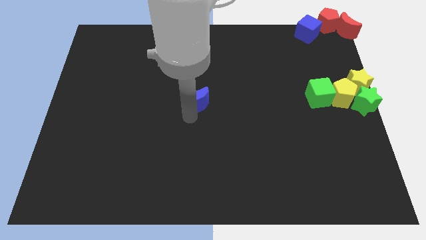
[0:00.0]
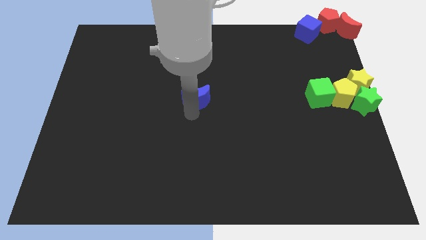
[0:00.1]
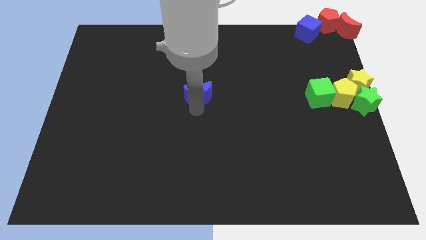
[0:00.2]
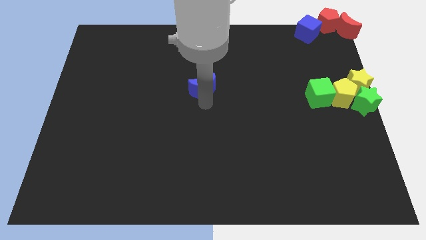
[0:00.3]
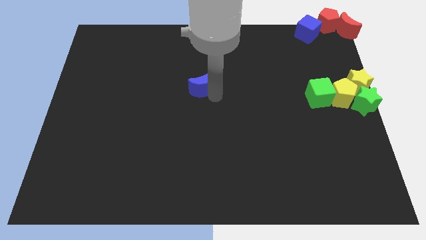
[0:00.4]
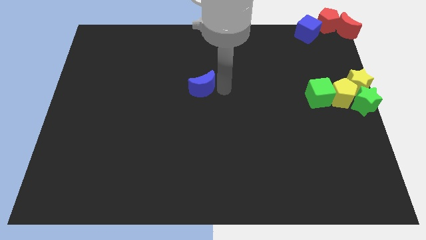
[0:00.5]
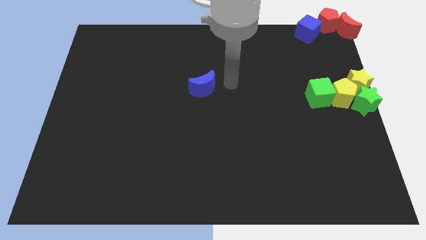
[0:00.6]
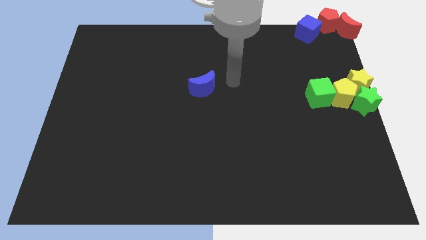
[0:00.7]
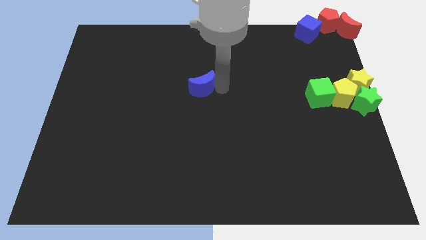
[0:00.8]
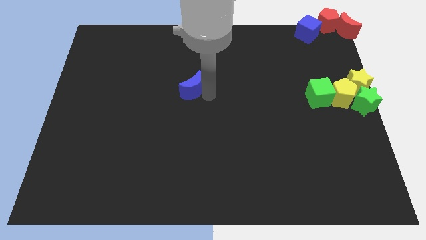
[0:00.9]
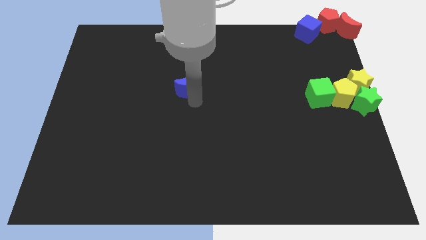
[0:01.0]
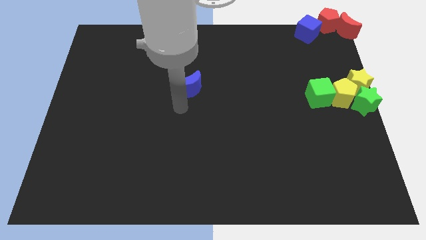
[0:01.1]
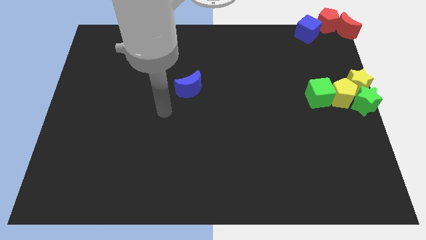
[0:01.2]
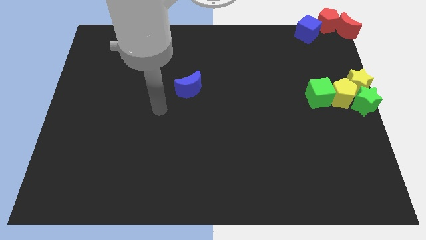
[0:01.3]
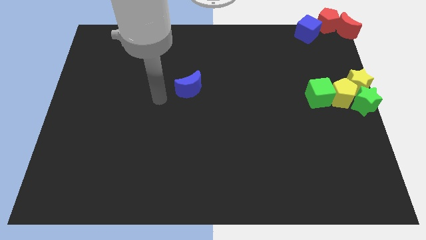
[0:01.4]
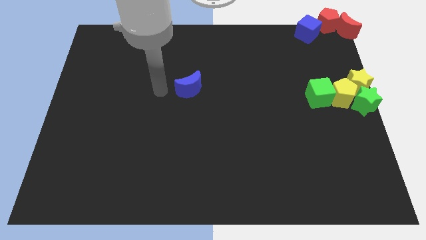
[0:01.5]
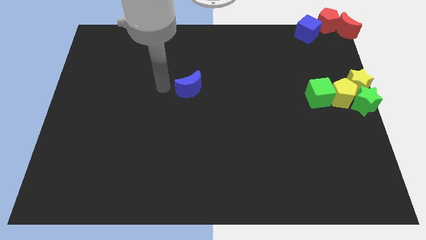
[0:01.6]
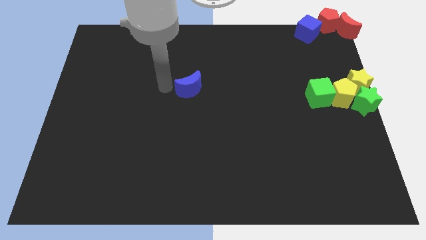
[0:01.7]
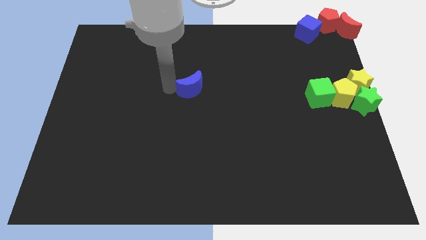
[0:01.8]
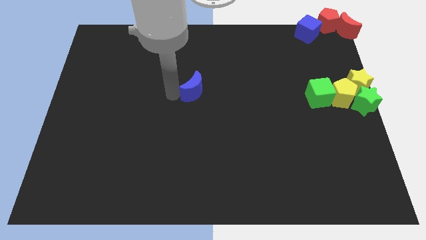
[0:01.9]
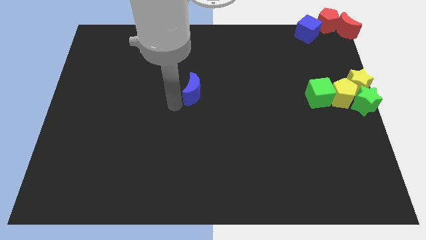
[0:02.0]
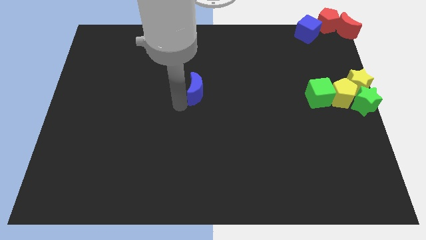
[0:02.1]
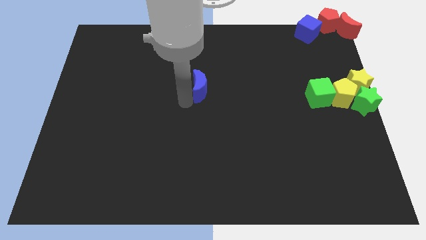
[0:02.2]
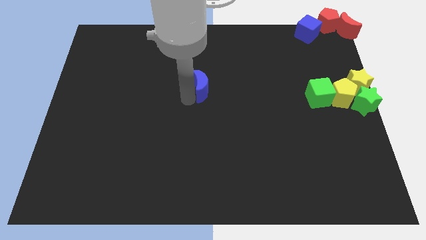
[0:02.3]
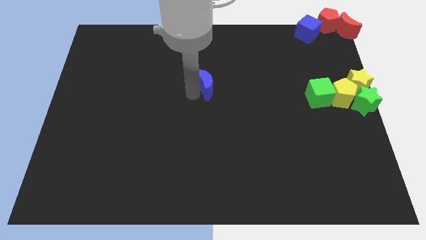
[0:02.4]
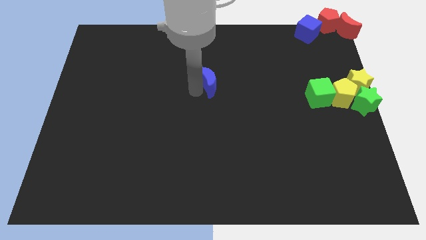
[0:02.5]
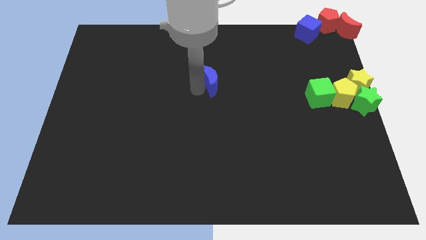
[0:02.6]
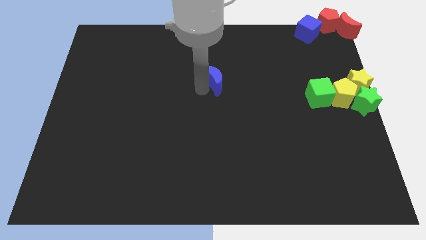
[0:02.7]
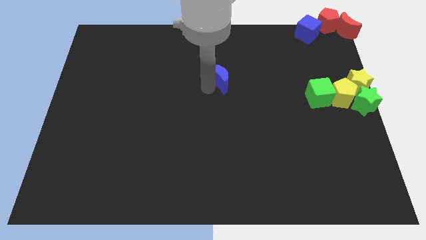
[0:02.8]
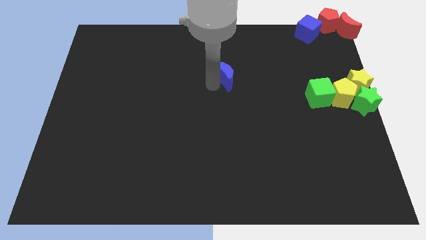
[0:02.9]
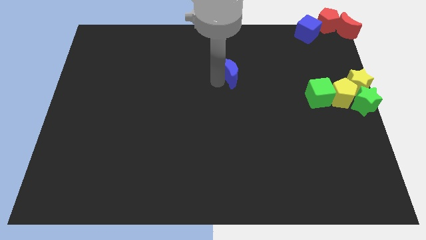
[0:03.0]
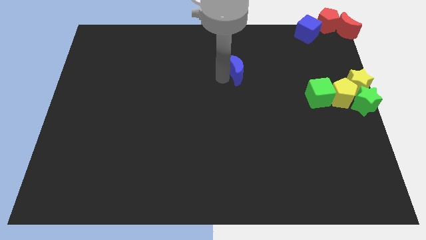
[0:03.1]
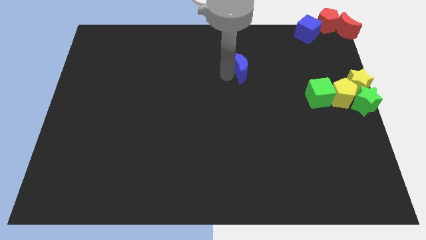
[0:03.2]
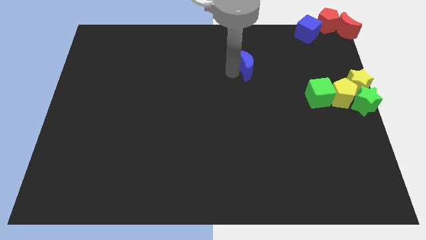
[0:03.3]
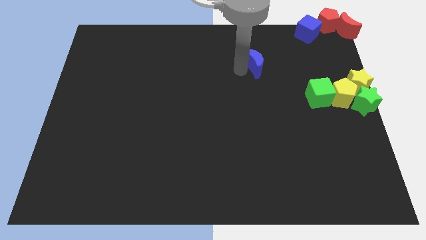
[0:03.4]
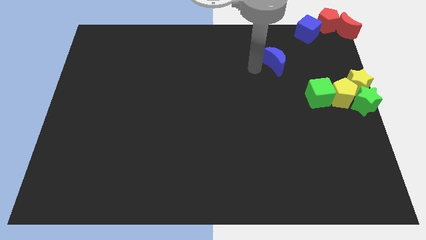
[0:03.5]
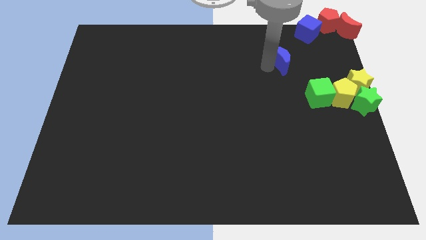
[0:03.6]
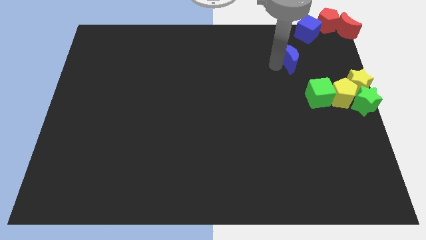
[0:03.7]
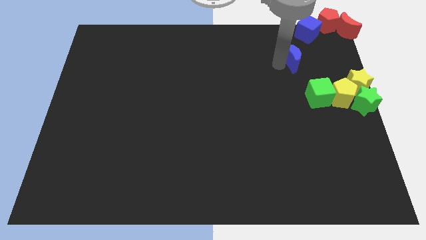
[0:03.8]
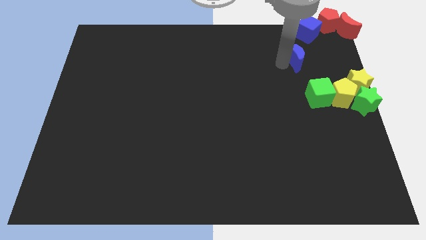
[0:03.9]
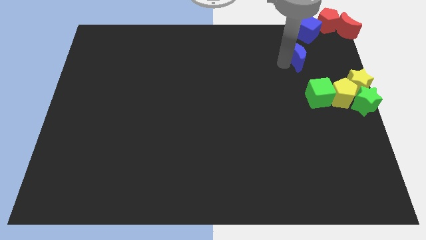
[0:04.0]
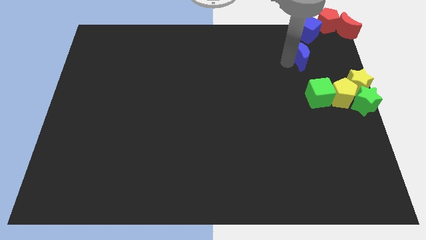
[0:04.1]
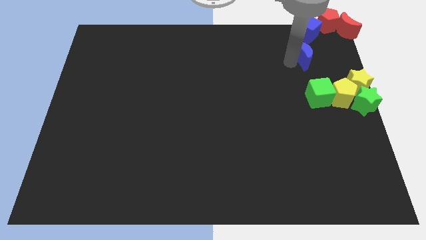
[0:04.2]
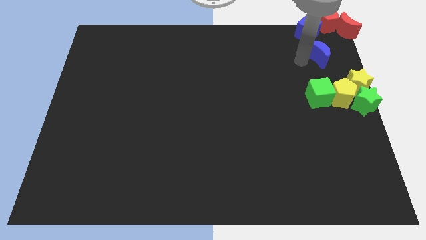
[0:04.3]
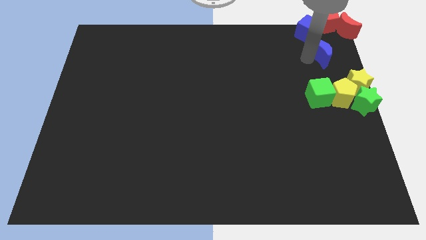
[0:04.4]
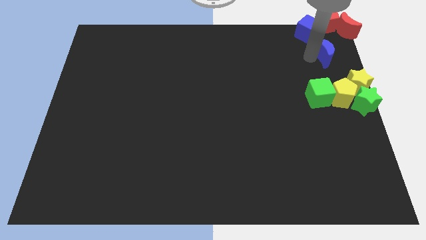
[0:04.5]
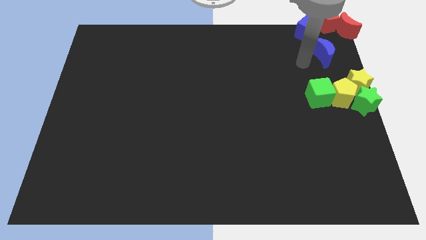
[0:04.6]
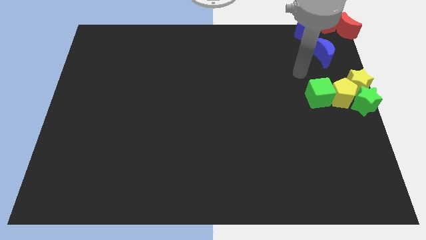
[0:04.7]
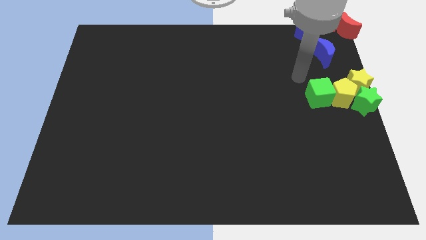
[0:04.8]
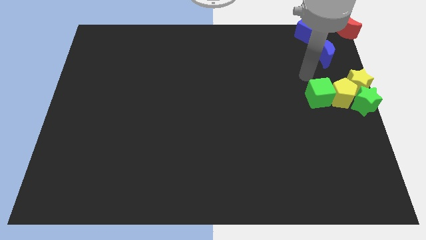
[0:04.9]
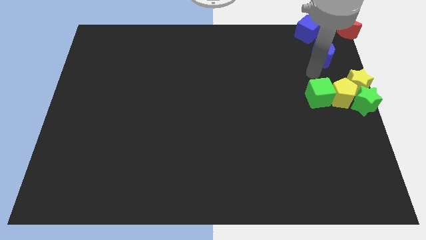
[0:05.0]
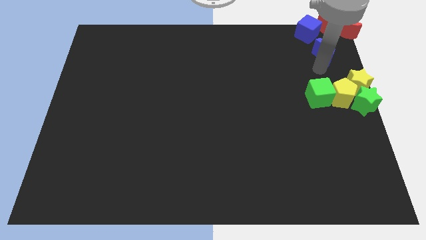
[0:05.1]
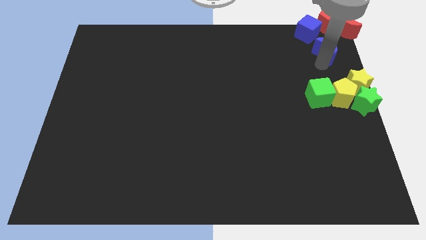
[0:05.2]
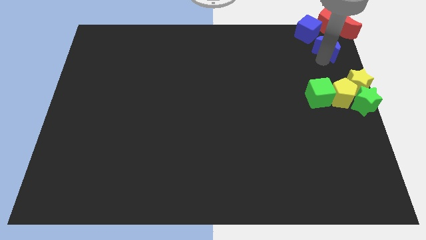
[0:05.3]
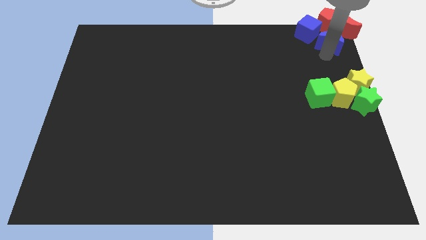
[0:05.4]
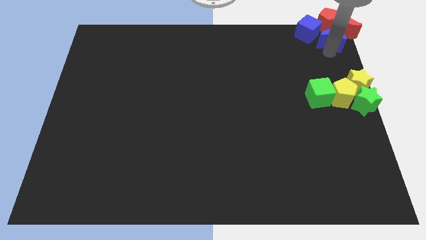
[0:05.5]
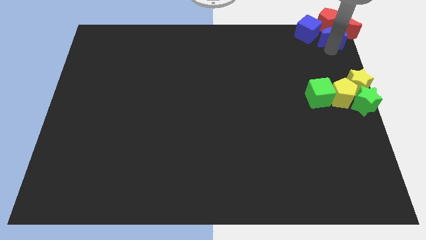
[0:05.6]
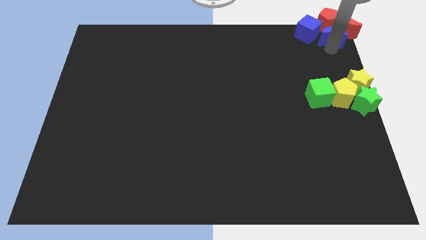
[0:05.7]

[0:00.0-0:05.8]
place the blue moon below the red pentagon

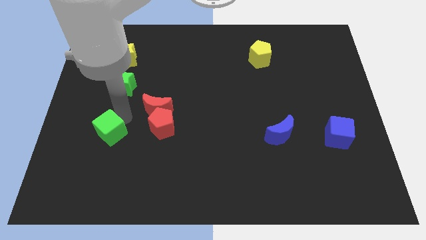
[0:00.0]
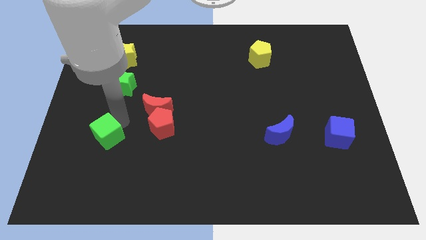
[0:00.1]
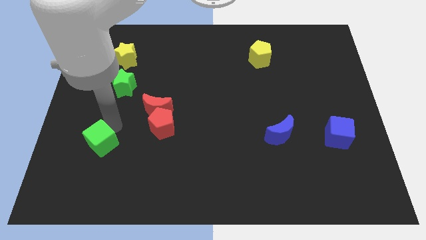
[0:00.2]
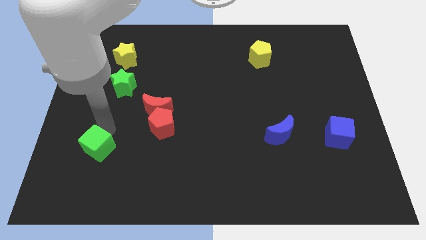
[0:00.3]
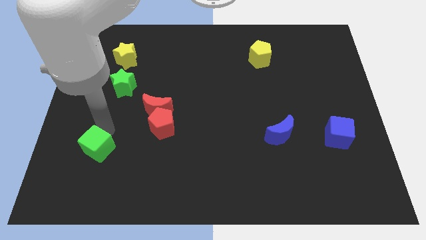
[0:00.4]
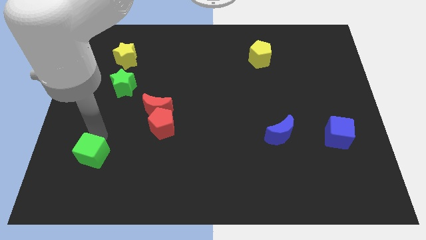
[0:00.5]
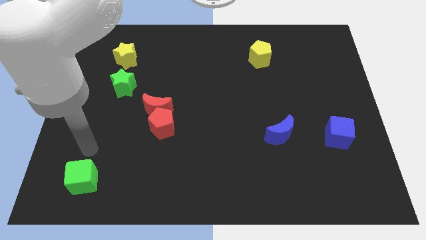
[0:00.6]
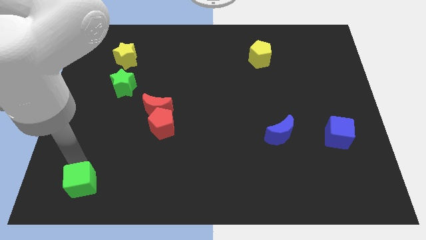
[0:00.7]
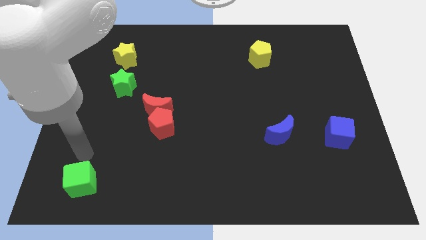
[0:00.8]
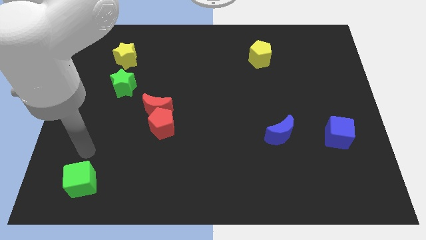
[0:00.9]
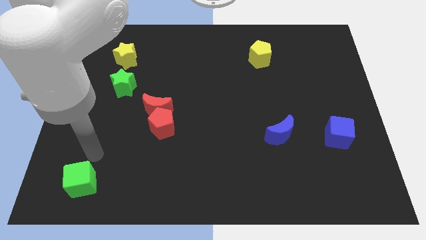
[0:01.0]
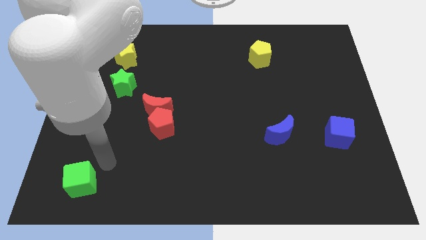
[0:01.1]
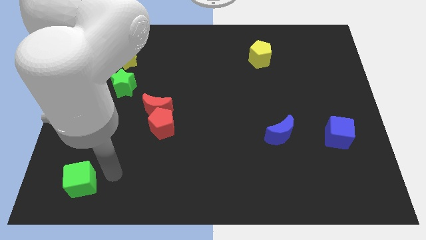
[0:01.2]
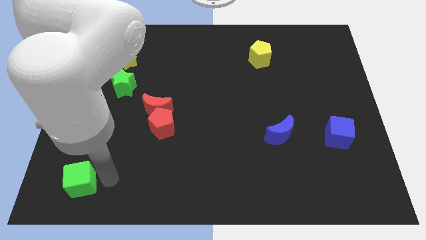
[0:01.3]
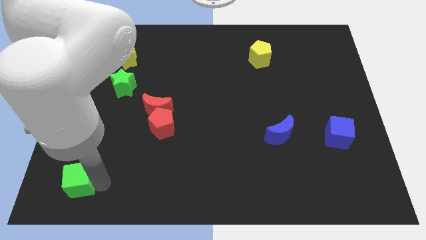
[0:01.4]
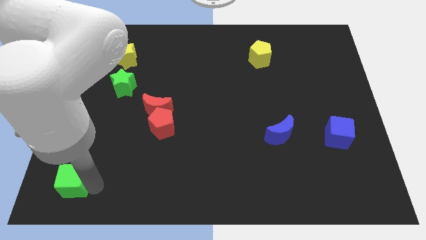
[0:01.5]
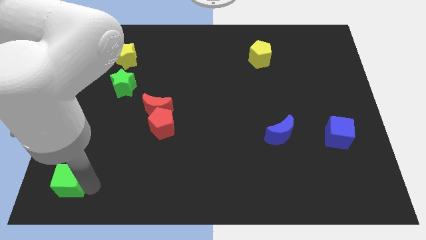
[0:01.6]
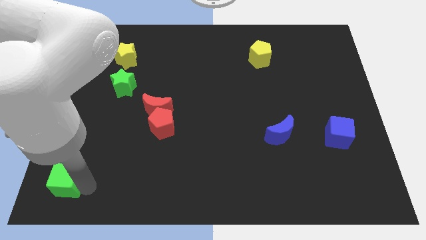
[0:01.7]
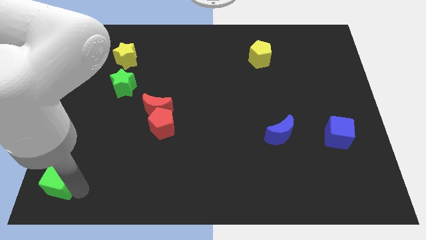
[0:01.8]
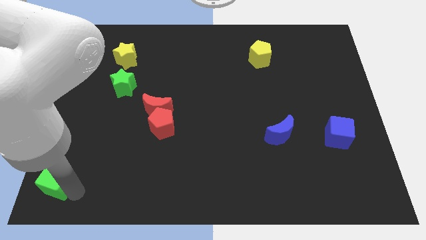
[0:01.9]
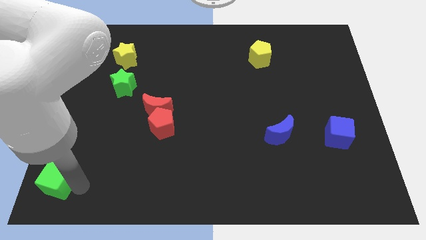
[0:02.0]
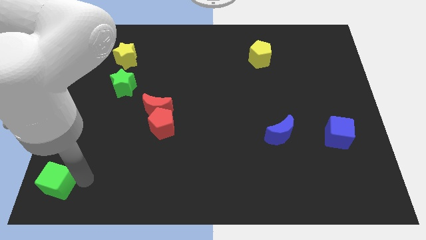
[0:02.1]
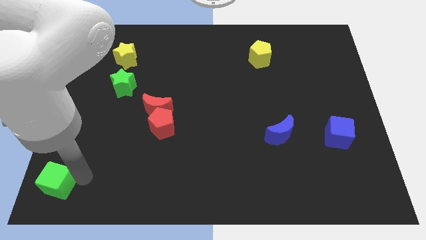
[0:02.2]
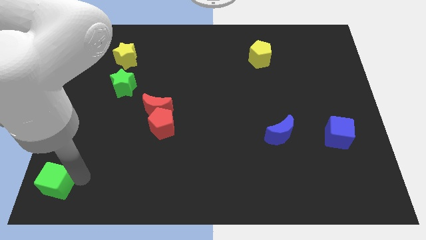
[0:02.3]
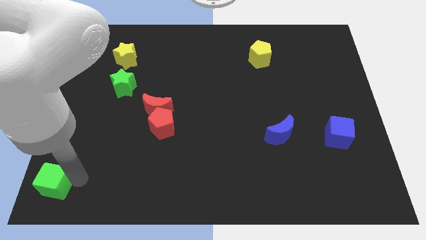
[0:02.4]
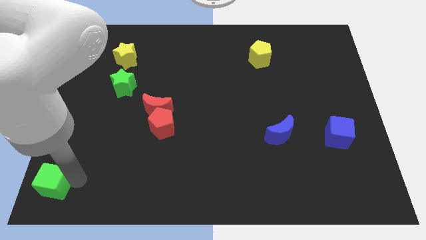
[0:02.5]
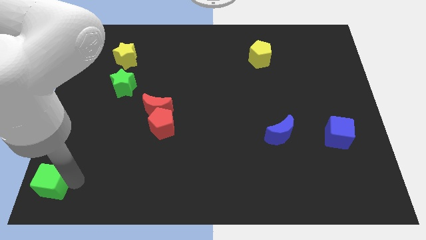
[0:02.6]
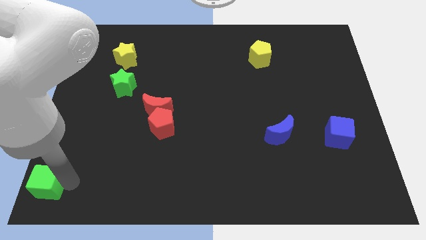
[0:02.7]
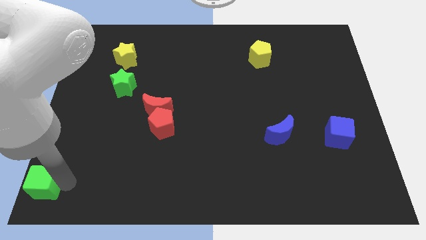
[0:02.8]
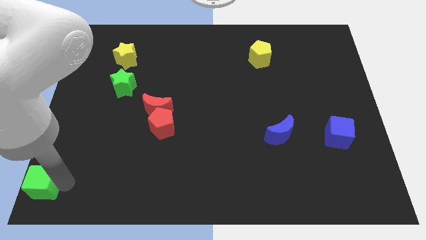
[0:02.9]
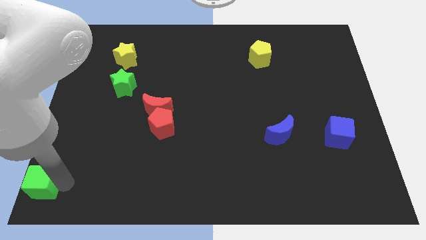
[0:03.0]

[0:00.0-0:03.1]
drag green cube to bottom left of the board
